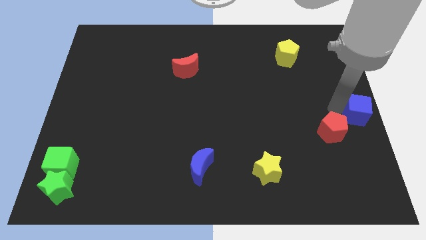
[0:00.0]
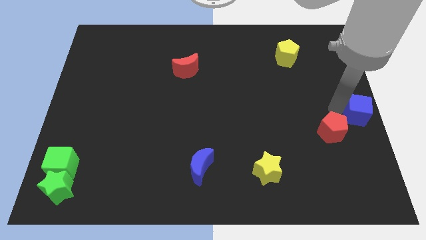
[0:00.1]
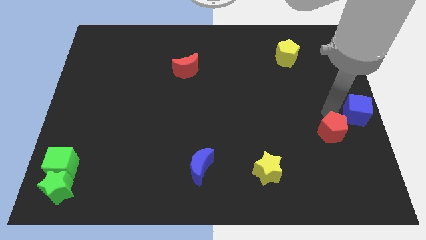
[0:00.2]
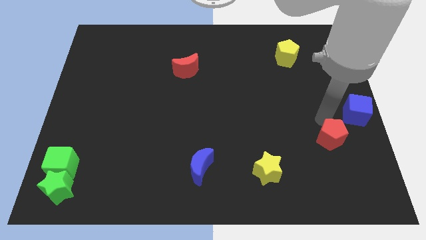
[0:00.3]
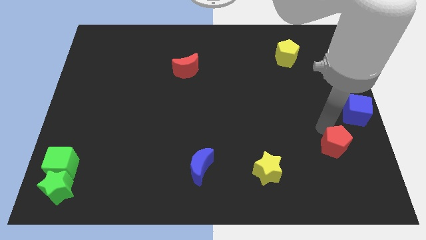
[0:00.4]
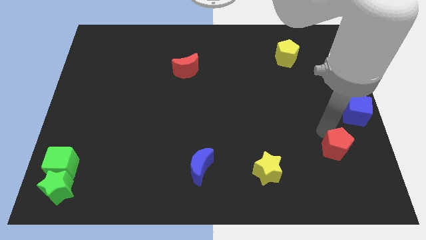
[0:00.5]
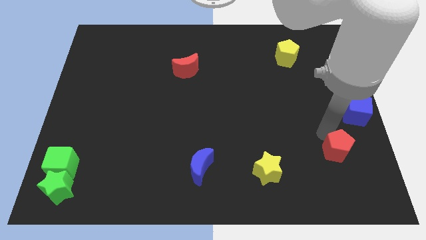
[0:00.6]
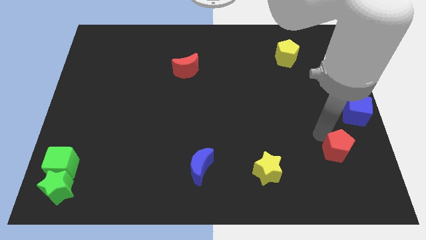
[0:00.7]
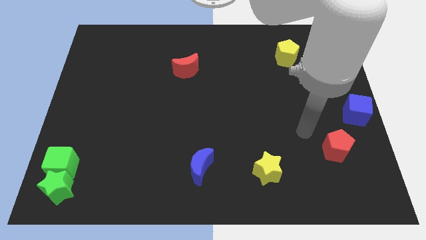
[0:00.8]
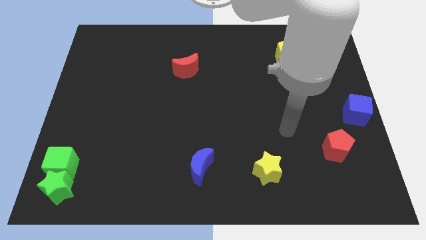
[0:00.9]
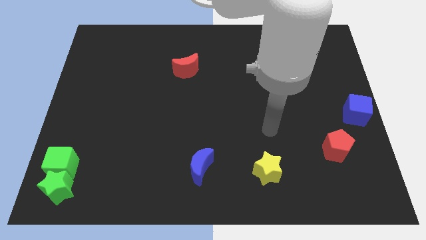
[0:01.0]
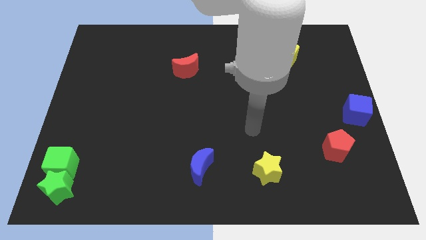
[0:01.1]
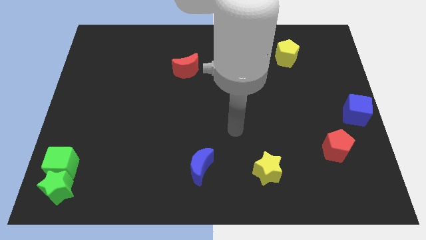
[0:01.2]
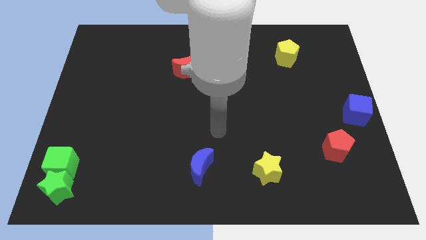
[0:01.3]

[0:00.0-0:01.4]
move the red pentagon diagonally to the blue cube

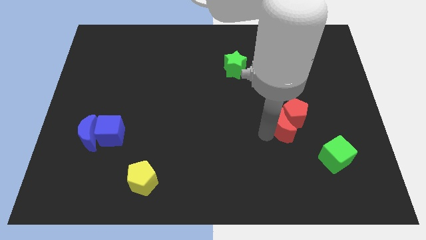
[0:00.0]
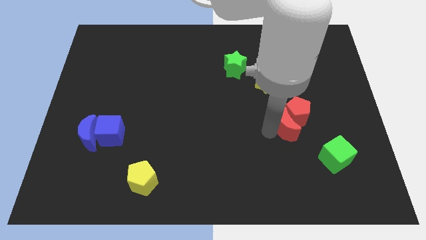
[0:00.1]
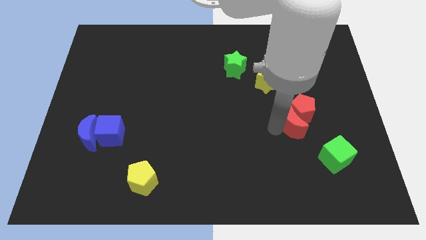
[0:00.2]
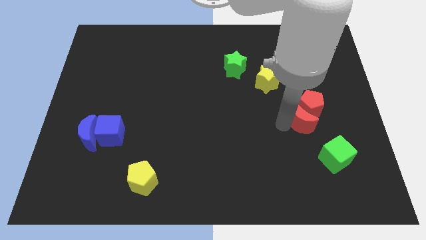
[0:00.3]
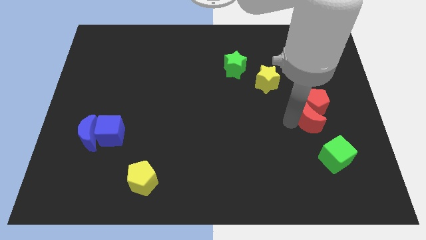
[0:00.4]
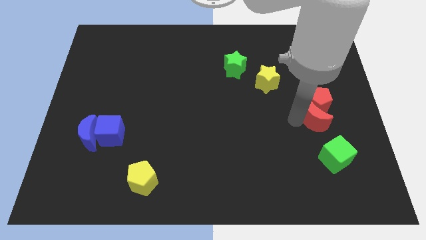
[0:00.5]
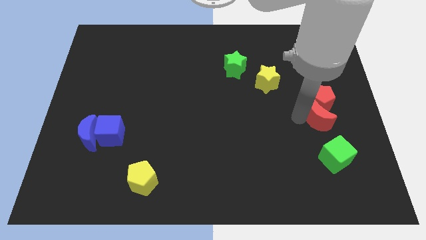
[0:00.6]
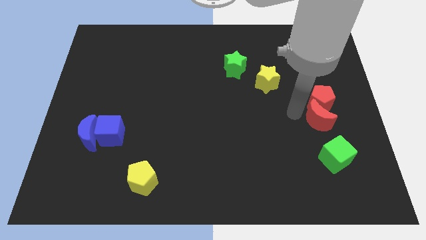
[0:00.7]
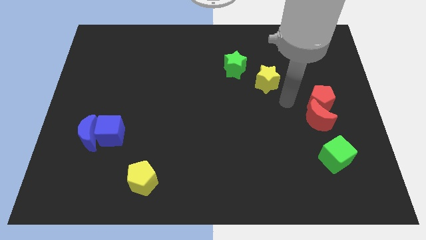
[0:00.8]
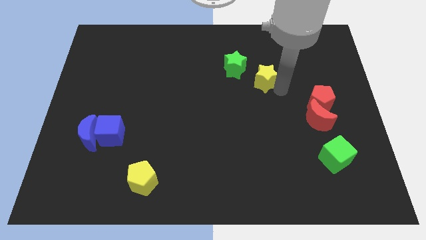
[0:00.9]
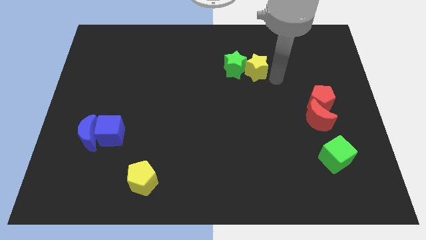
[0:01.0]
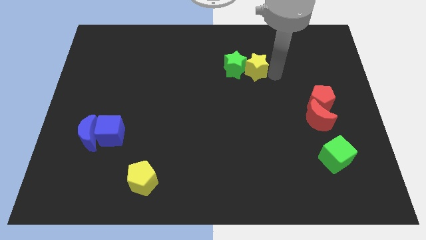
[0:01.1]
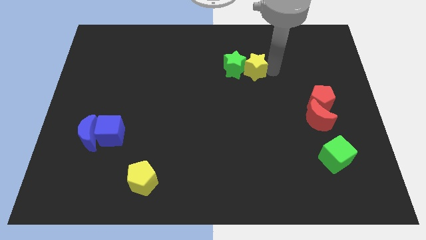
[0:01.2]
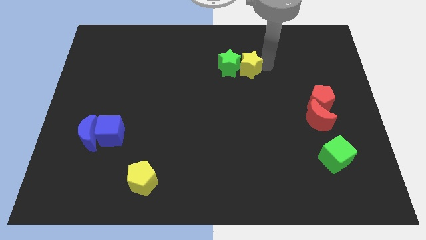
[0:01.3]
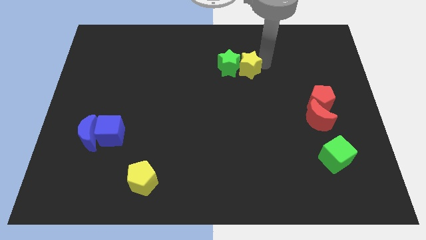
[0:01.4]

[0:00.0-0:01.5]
place the red blocks vertically on top of the green cube

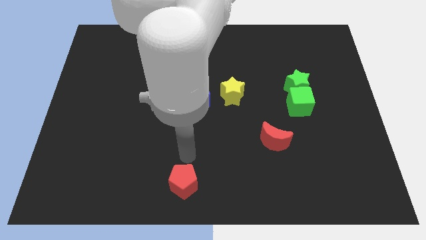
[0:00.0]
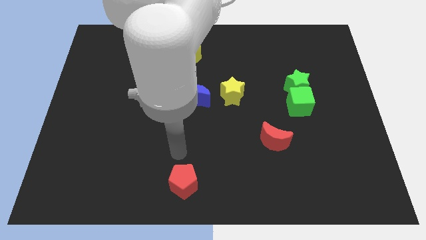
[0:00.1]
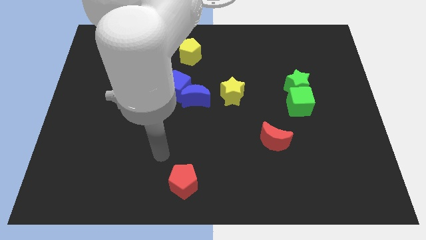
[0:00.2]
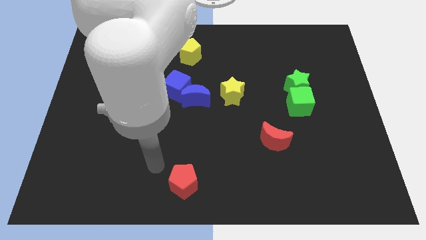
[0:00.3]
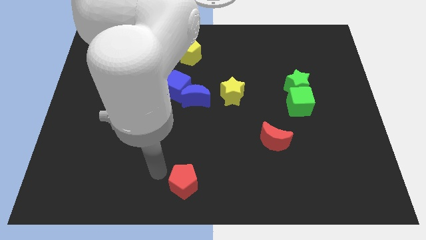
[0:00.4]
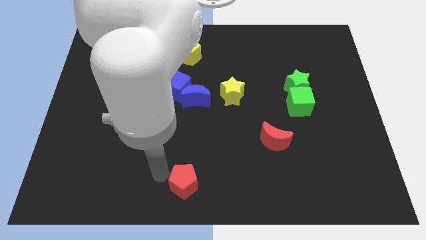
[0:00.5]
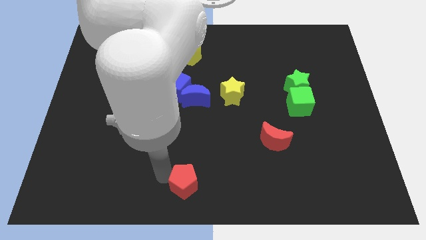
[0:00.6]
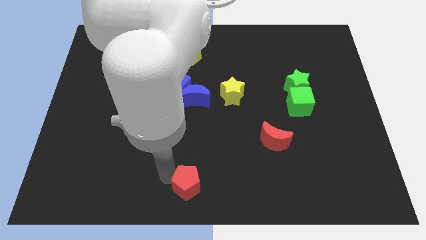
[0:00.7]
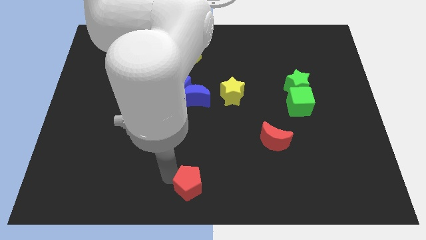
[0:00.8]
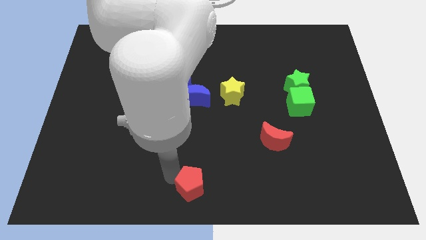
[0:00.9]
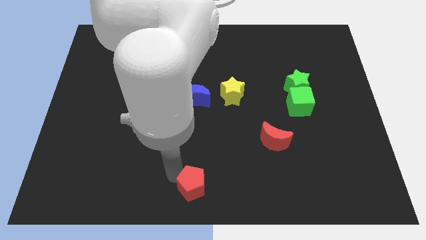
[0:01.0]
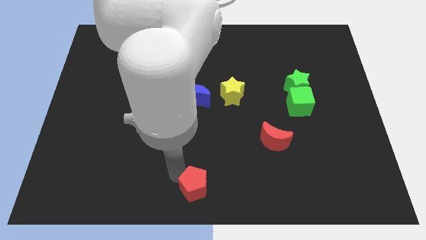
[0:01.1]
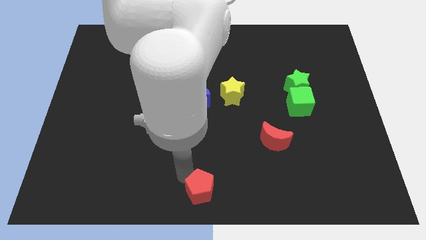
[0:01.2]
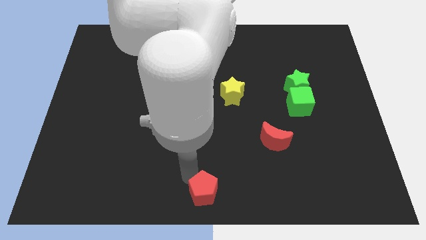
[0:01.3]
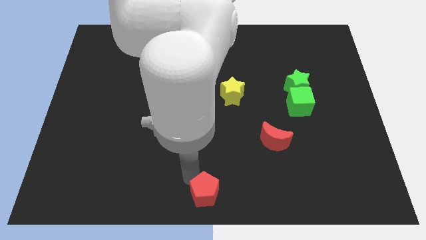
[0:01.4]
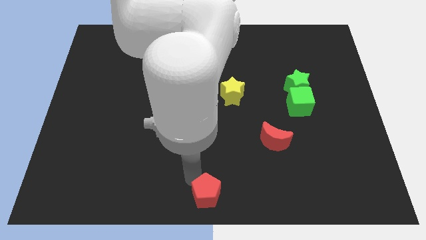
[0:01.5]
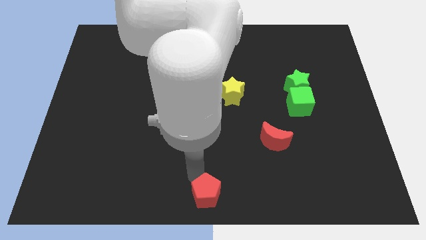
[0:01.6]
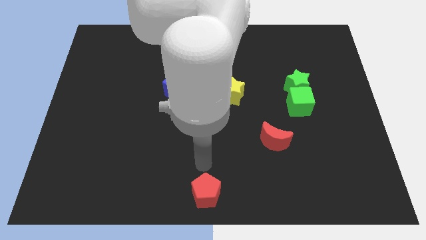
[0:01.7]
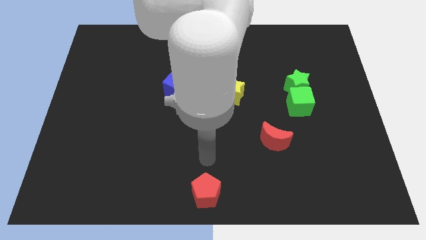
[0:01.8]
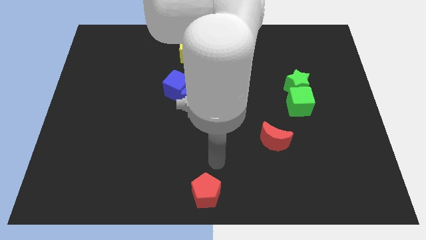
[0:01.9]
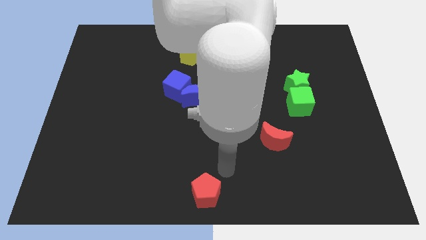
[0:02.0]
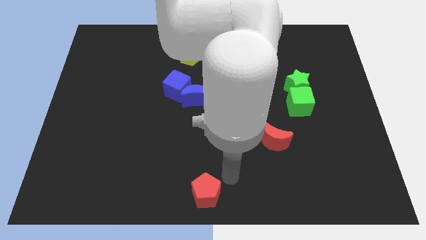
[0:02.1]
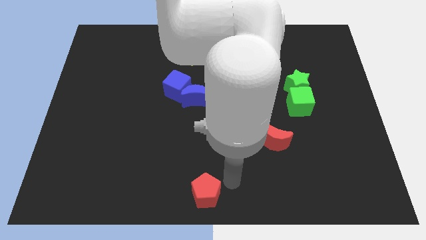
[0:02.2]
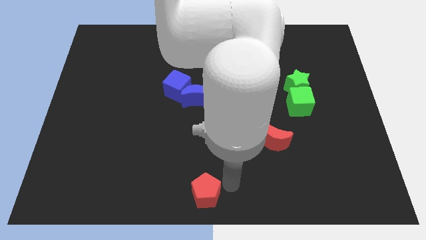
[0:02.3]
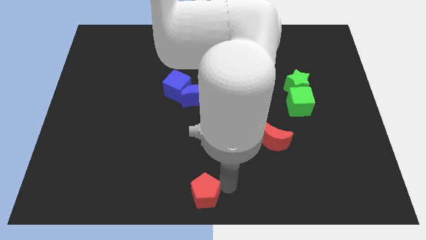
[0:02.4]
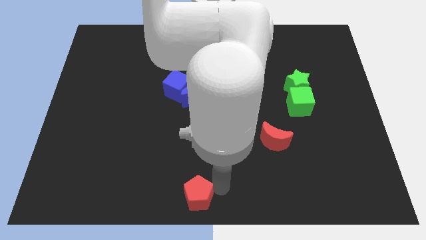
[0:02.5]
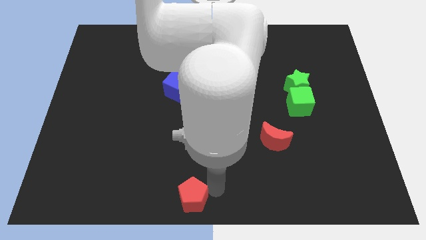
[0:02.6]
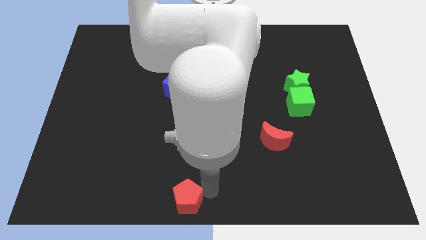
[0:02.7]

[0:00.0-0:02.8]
move the red pentagon towards the bottom left

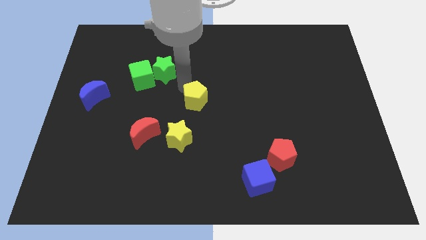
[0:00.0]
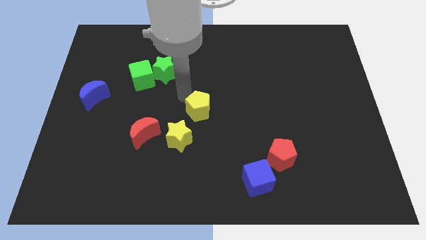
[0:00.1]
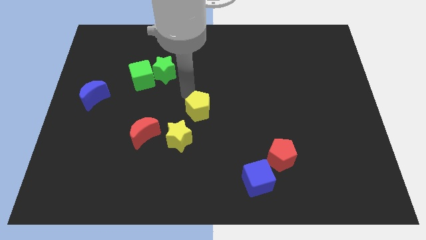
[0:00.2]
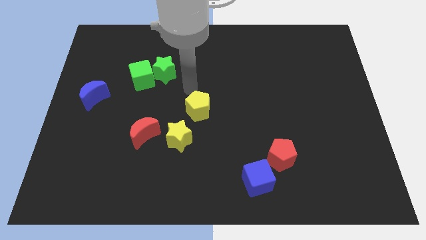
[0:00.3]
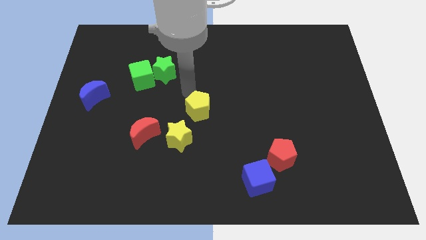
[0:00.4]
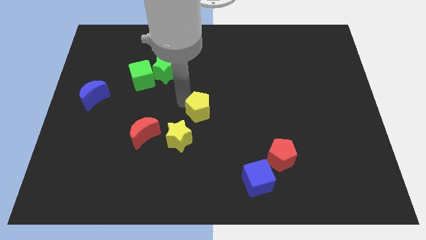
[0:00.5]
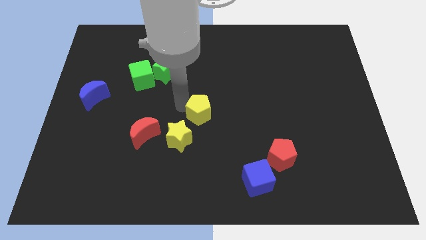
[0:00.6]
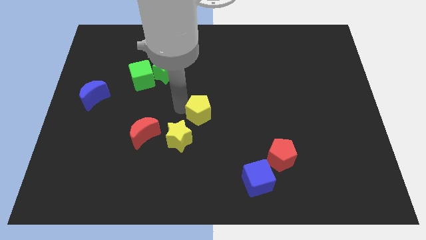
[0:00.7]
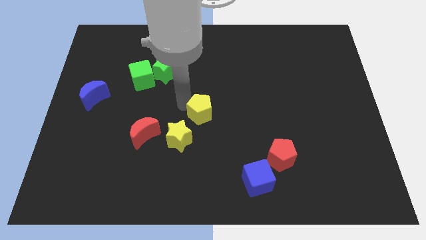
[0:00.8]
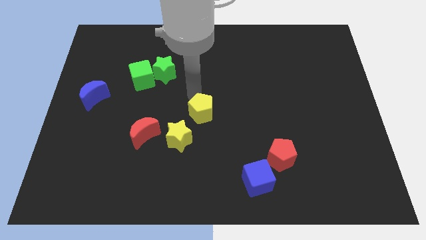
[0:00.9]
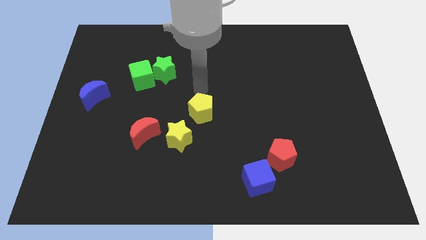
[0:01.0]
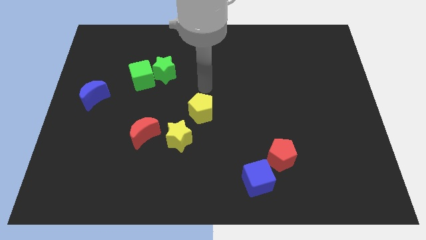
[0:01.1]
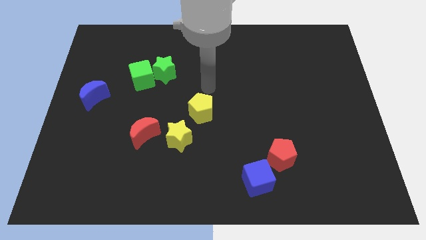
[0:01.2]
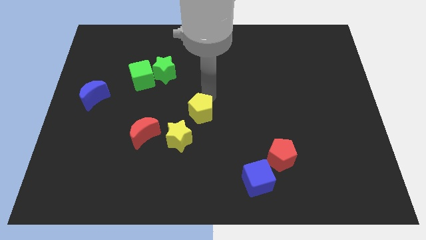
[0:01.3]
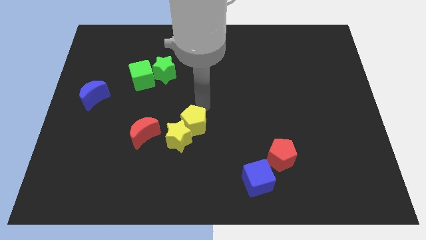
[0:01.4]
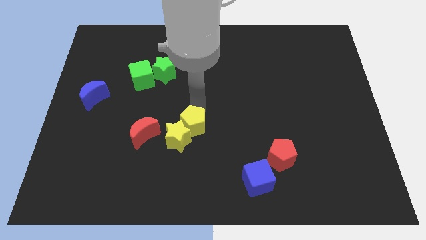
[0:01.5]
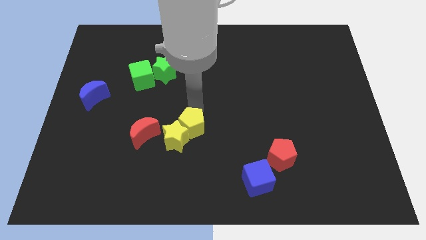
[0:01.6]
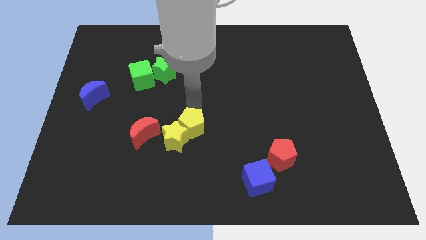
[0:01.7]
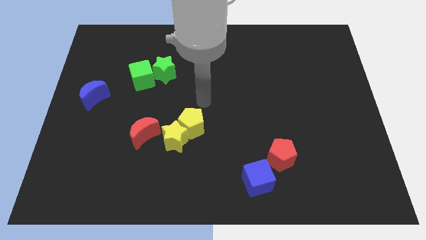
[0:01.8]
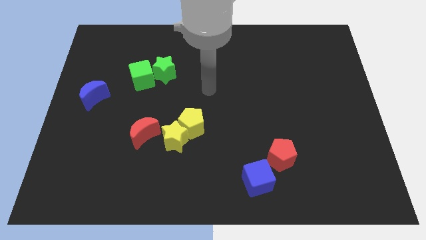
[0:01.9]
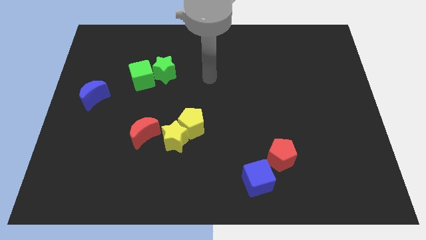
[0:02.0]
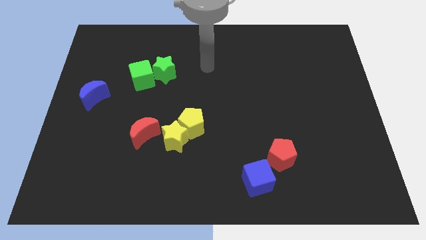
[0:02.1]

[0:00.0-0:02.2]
push the yellow pentagon into the yellow star

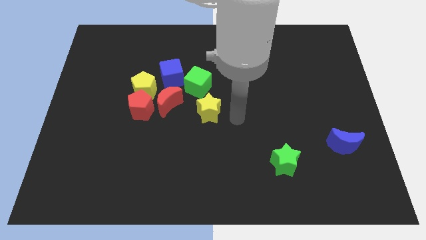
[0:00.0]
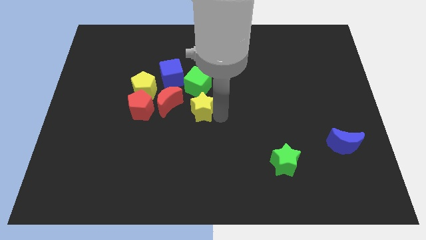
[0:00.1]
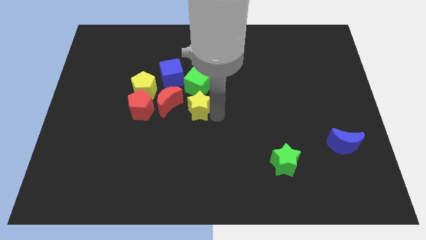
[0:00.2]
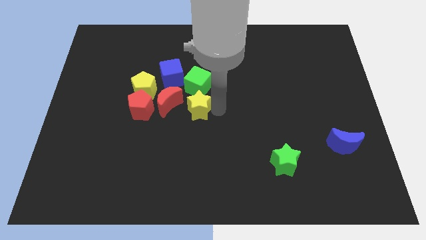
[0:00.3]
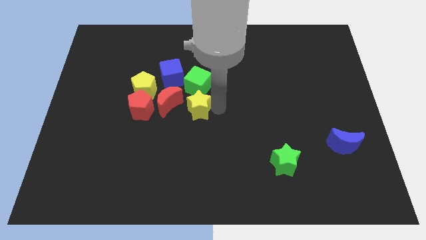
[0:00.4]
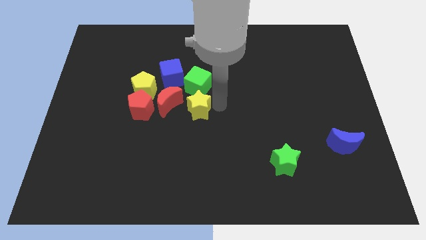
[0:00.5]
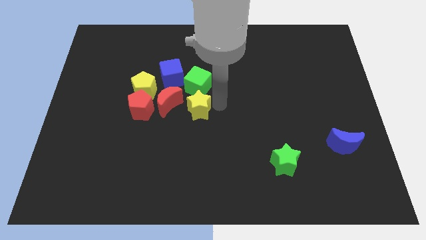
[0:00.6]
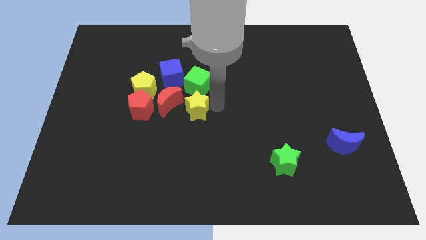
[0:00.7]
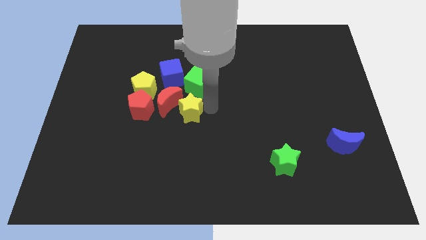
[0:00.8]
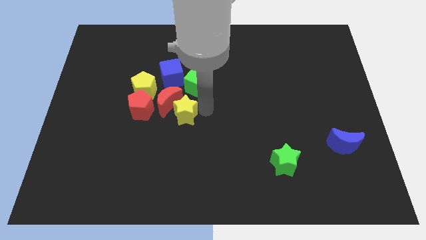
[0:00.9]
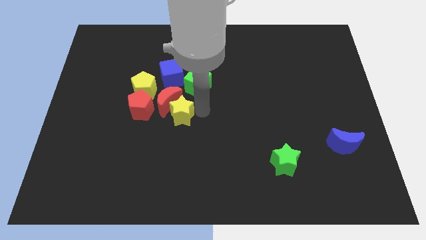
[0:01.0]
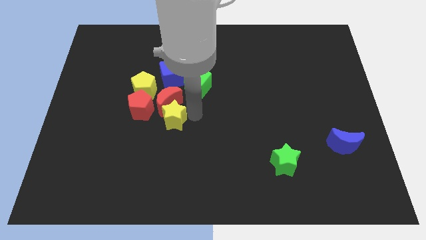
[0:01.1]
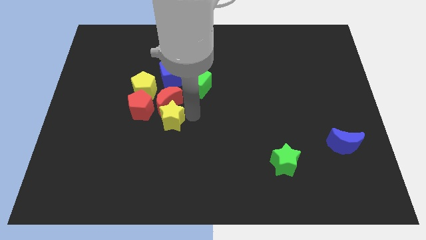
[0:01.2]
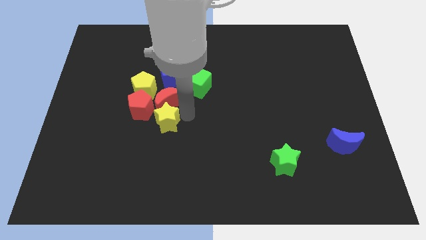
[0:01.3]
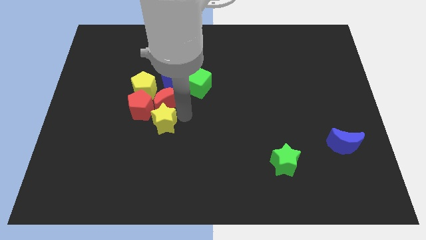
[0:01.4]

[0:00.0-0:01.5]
put the yellow star below the red moon
